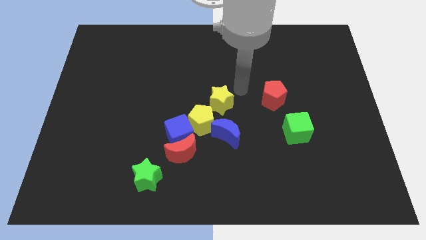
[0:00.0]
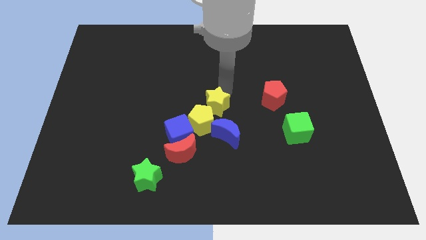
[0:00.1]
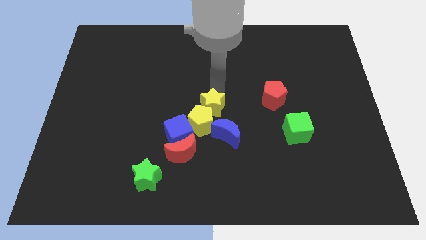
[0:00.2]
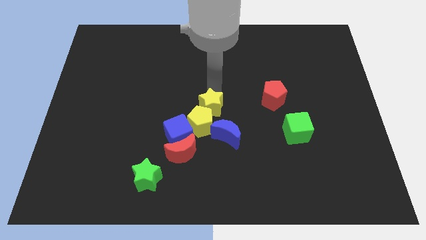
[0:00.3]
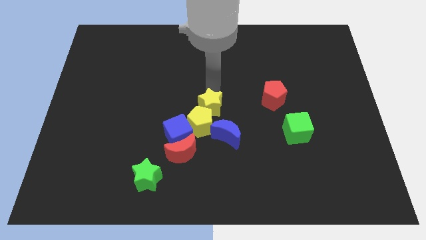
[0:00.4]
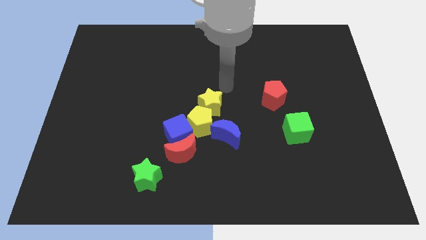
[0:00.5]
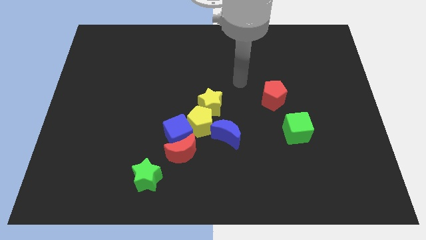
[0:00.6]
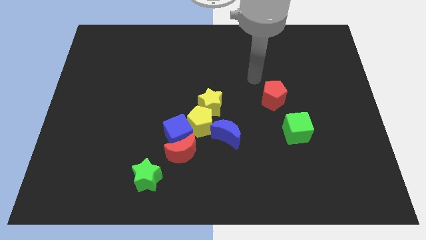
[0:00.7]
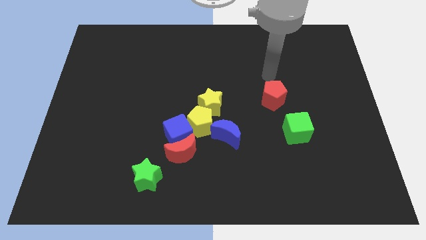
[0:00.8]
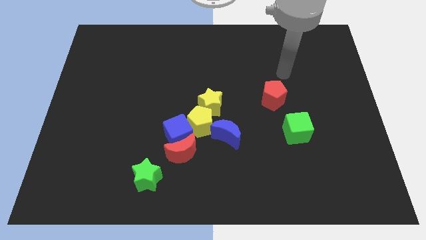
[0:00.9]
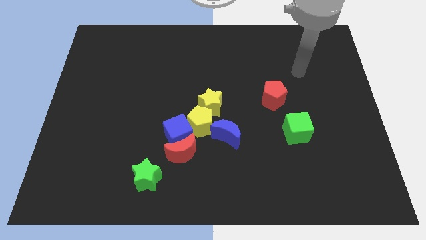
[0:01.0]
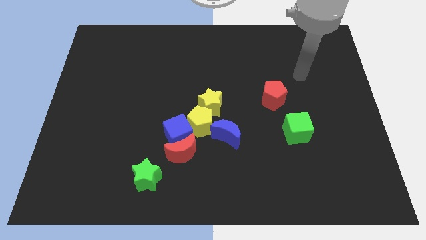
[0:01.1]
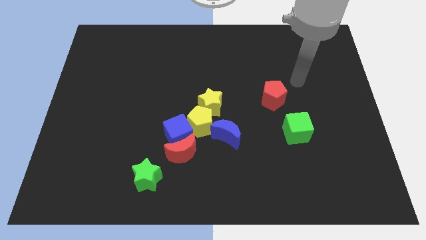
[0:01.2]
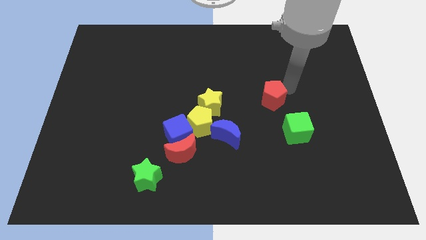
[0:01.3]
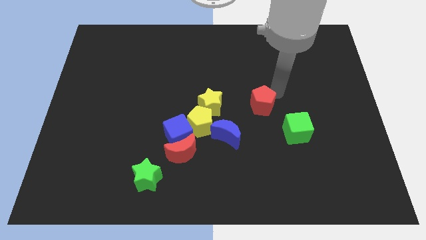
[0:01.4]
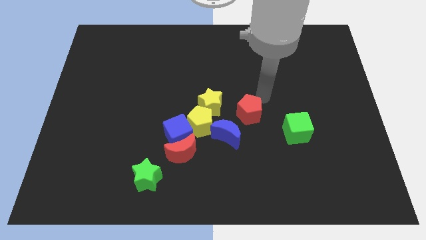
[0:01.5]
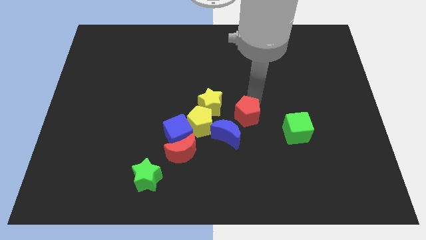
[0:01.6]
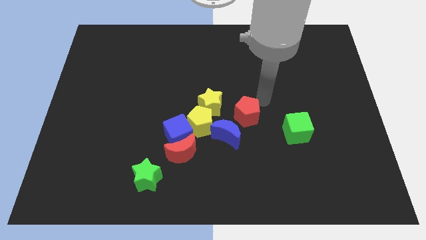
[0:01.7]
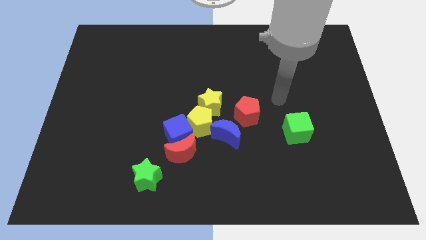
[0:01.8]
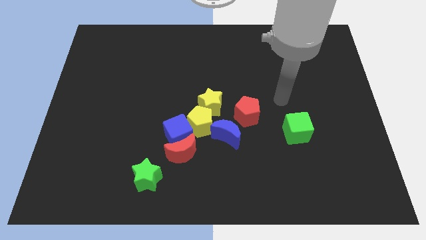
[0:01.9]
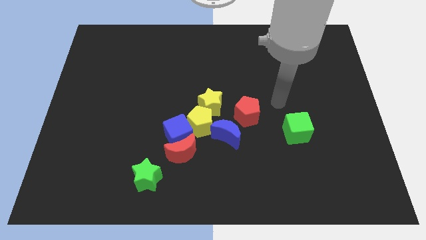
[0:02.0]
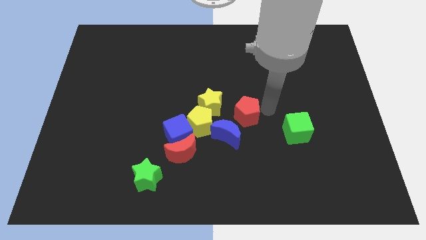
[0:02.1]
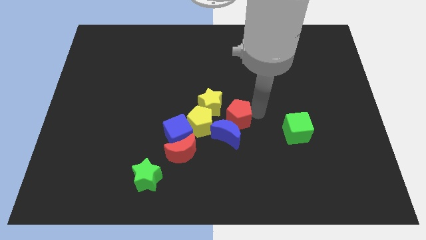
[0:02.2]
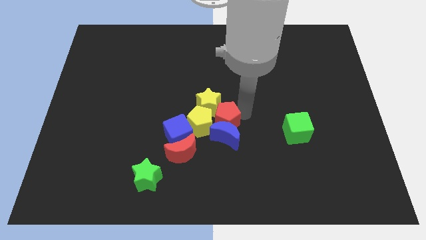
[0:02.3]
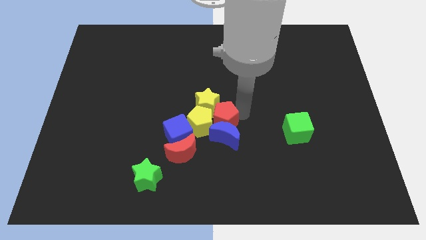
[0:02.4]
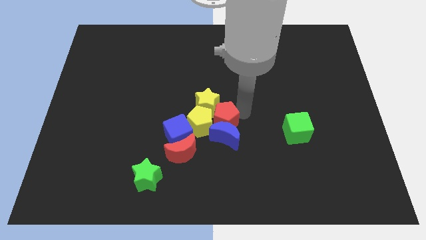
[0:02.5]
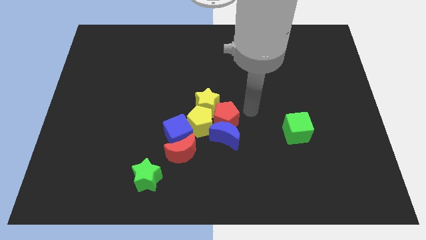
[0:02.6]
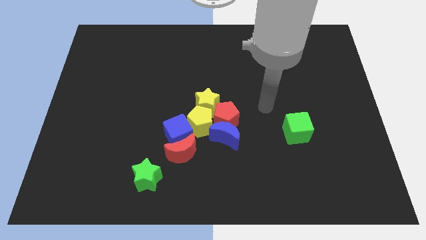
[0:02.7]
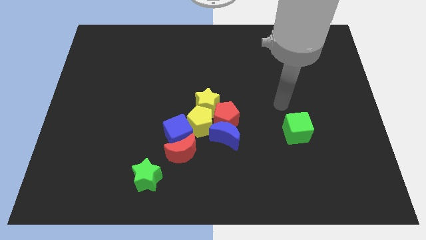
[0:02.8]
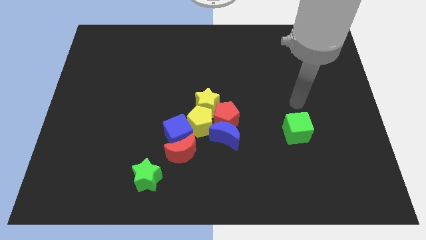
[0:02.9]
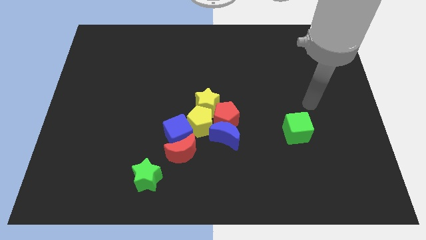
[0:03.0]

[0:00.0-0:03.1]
push the yellow star into the yellow pentagon

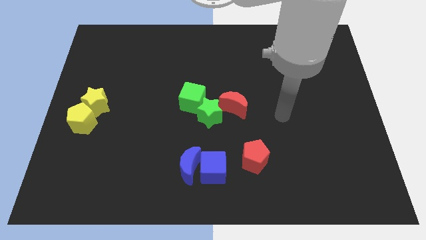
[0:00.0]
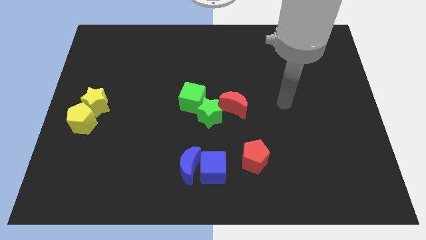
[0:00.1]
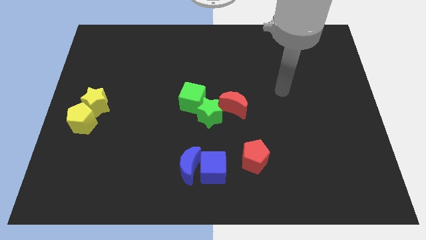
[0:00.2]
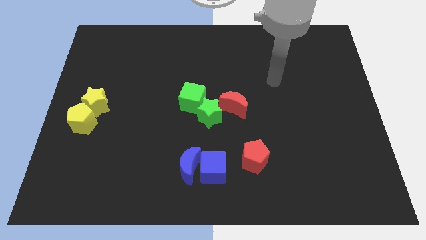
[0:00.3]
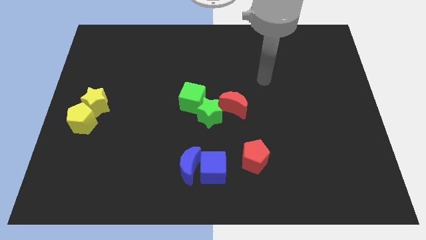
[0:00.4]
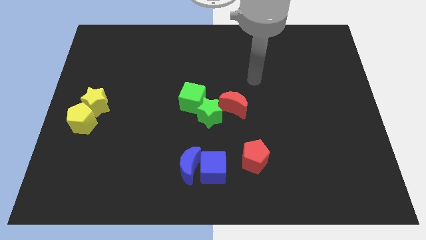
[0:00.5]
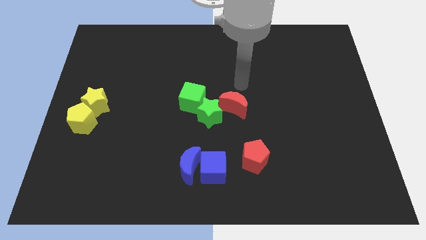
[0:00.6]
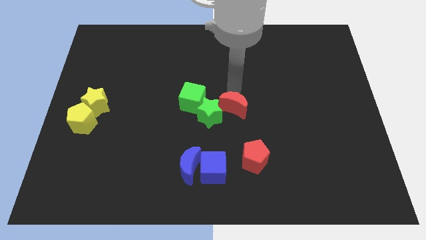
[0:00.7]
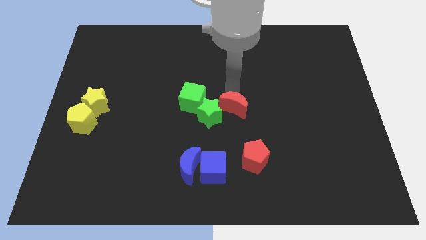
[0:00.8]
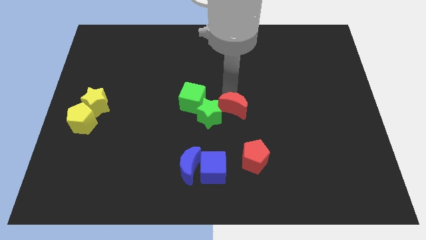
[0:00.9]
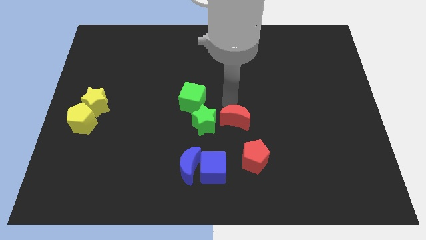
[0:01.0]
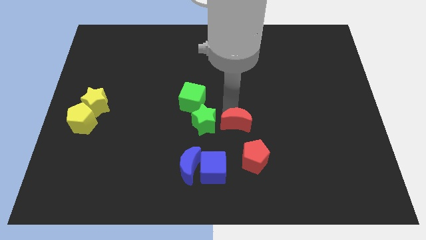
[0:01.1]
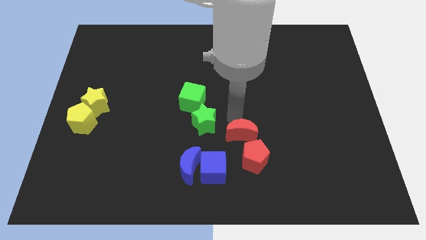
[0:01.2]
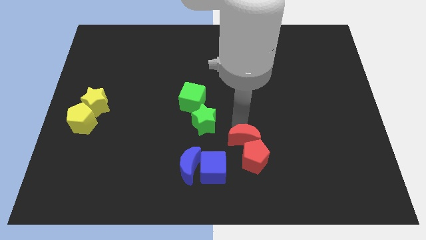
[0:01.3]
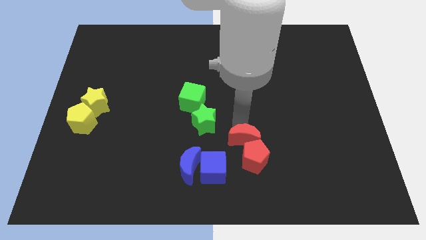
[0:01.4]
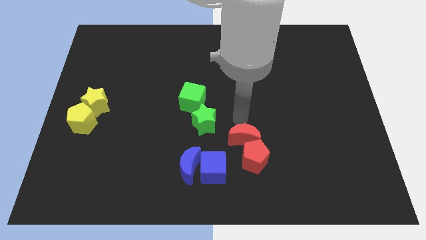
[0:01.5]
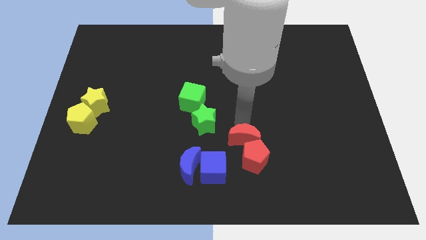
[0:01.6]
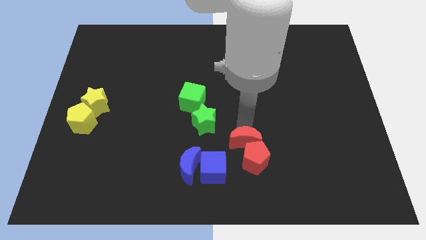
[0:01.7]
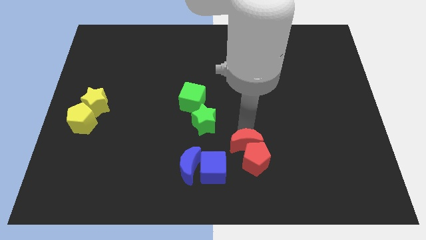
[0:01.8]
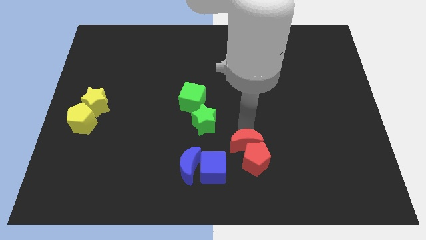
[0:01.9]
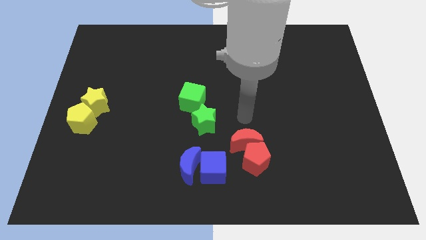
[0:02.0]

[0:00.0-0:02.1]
separate red moon from green star

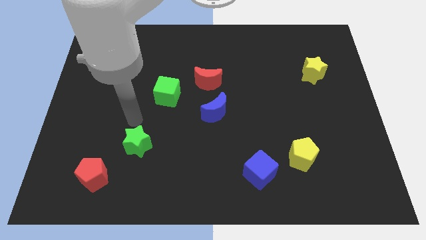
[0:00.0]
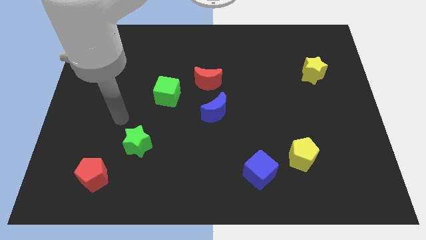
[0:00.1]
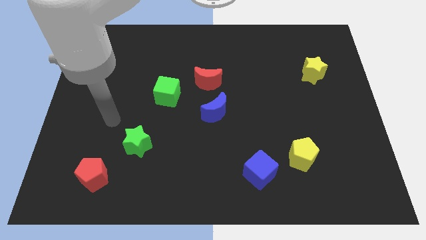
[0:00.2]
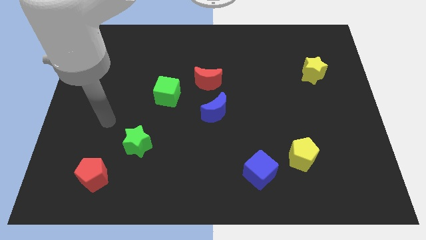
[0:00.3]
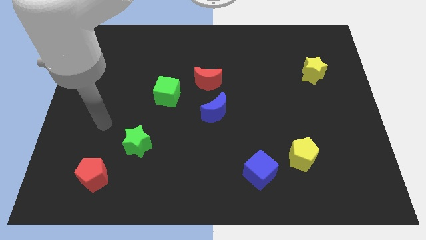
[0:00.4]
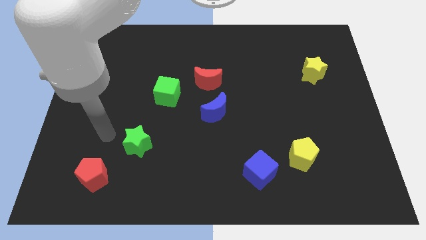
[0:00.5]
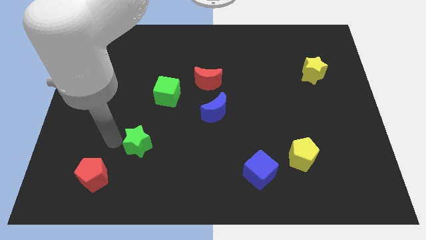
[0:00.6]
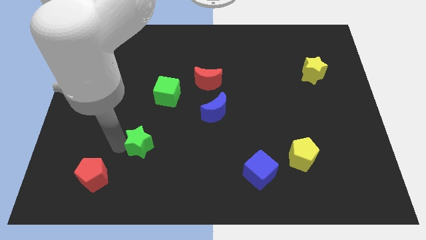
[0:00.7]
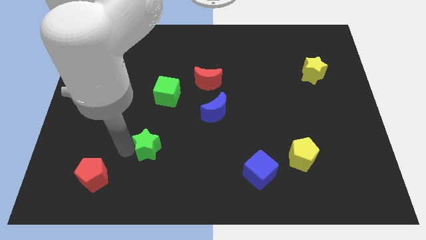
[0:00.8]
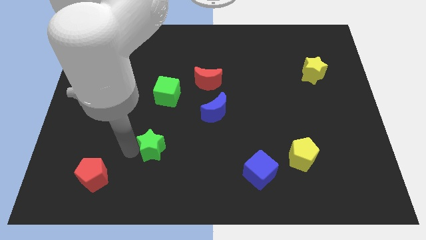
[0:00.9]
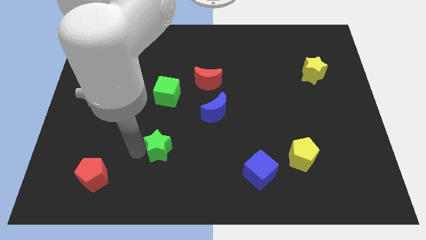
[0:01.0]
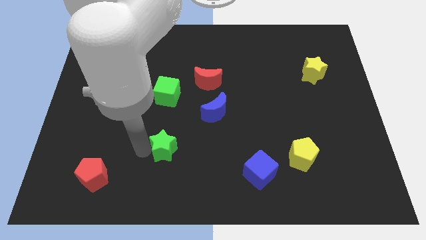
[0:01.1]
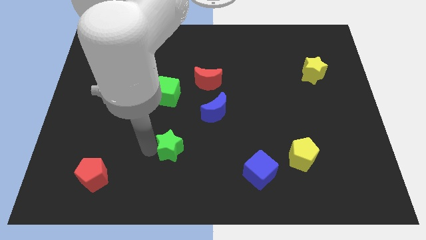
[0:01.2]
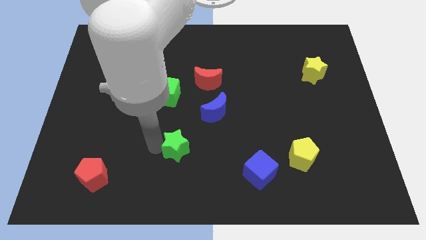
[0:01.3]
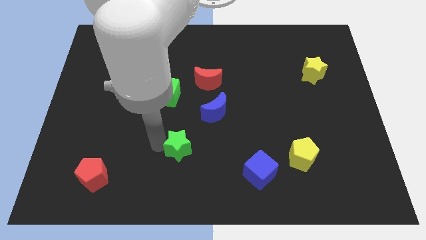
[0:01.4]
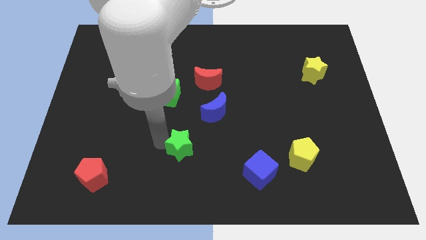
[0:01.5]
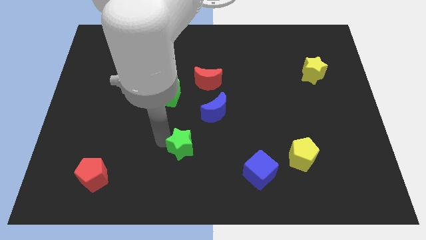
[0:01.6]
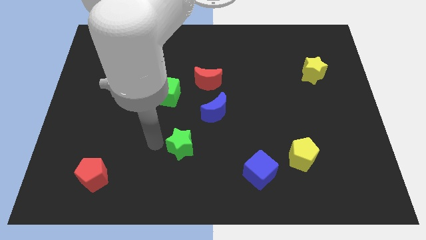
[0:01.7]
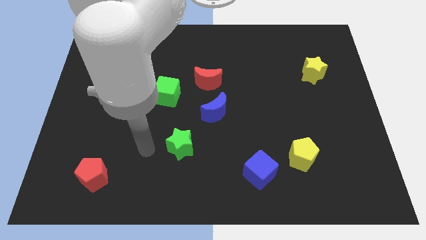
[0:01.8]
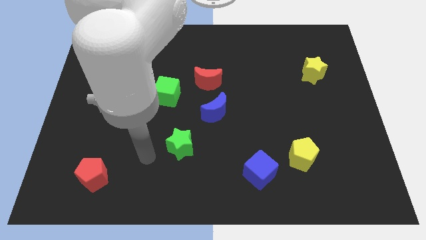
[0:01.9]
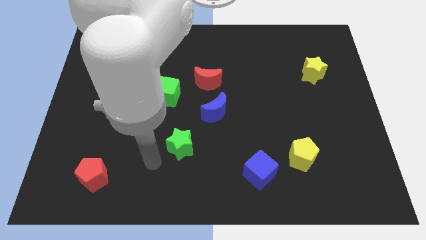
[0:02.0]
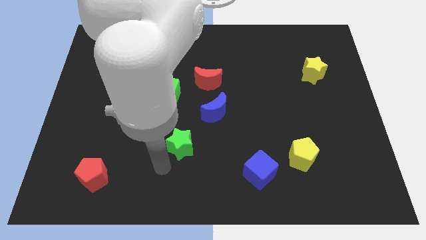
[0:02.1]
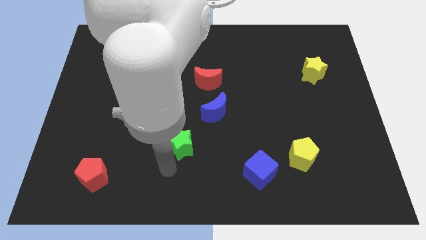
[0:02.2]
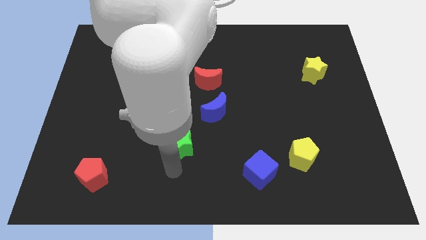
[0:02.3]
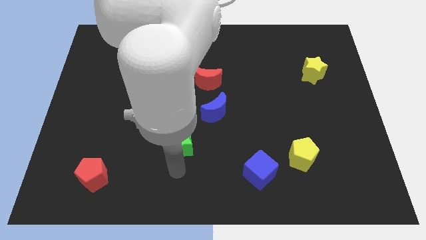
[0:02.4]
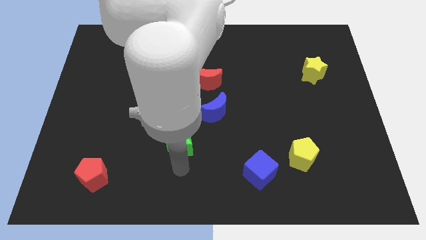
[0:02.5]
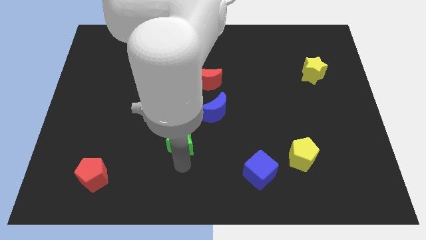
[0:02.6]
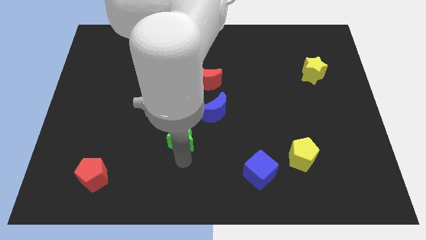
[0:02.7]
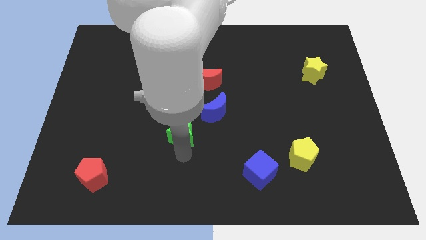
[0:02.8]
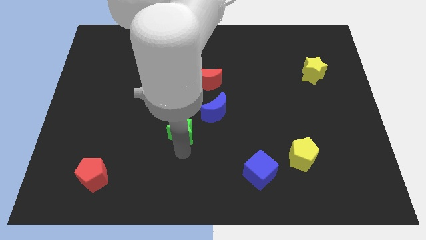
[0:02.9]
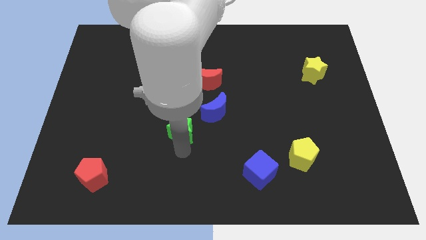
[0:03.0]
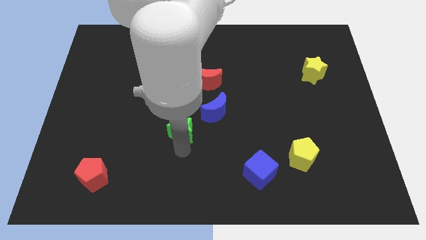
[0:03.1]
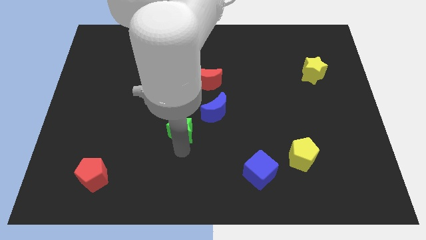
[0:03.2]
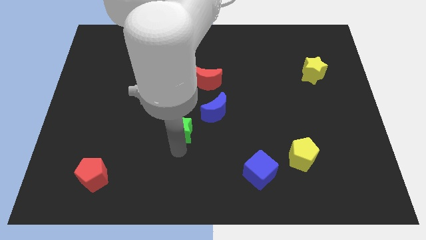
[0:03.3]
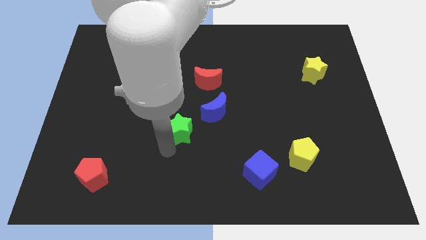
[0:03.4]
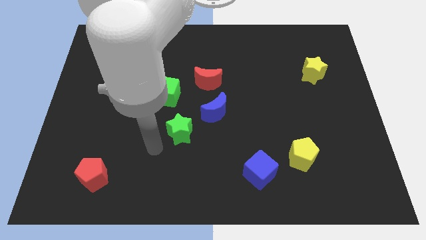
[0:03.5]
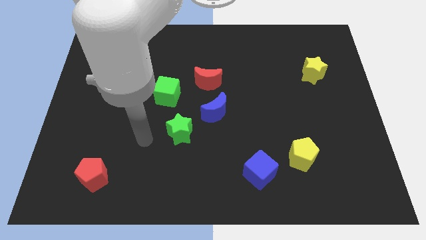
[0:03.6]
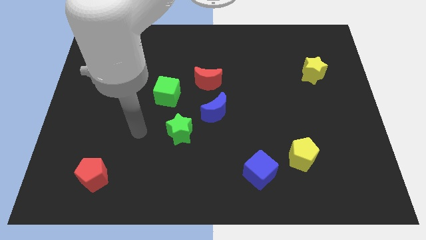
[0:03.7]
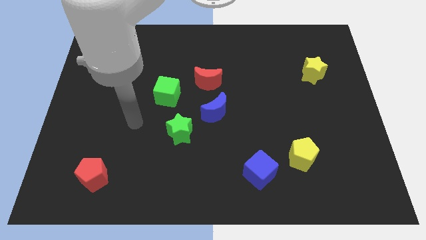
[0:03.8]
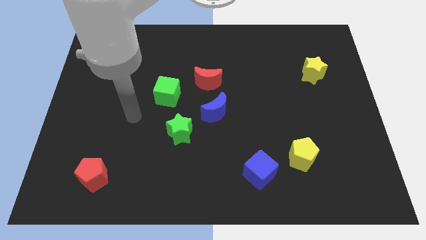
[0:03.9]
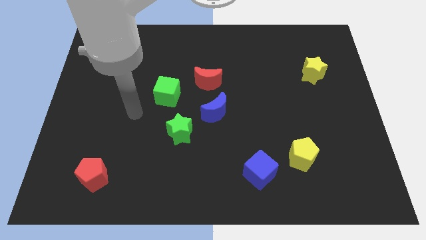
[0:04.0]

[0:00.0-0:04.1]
place green star below the blue moon
